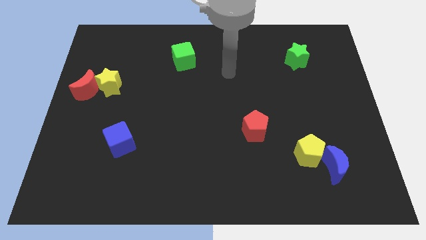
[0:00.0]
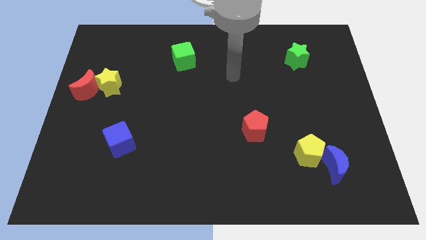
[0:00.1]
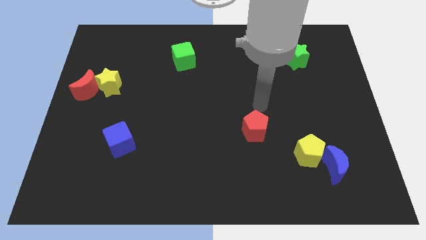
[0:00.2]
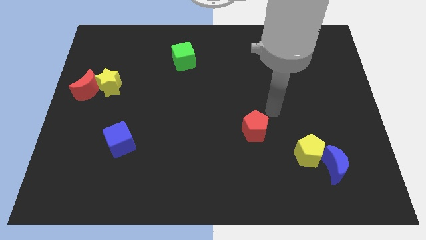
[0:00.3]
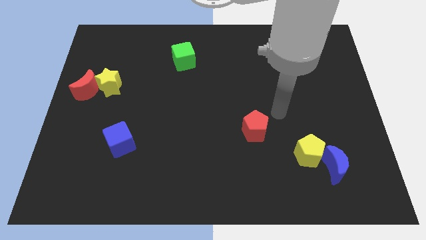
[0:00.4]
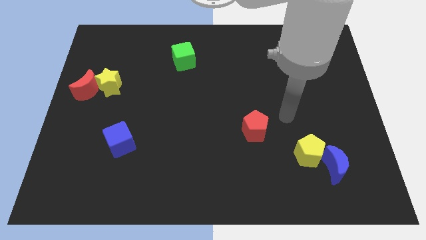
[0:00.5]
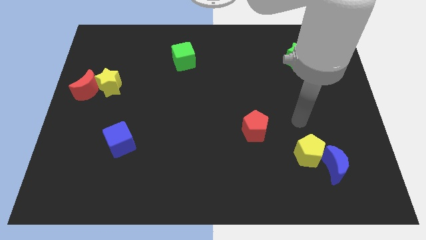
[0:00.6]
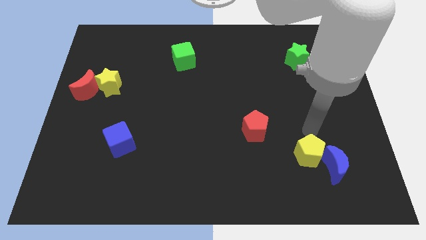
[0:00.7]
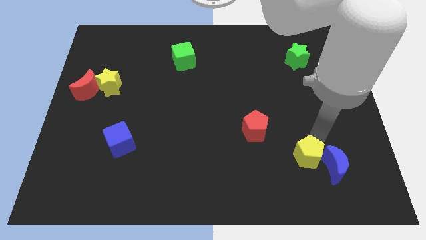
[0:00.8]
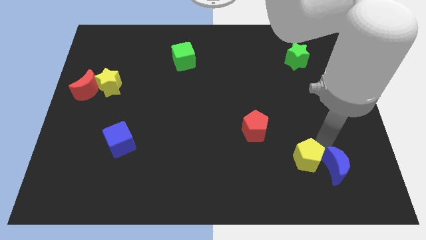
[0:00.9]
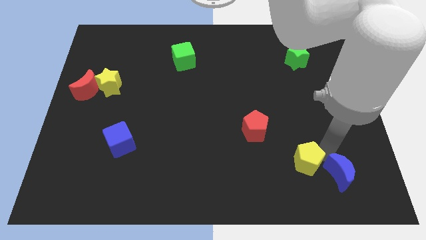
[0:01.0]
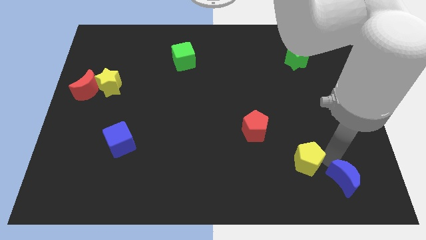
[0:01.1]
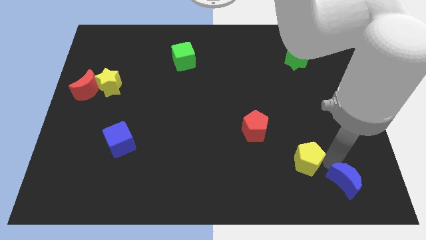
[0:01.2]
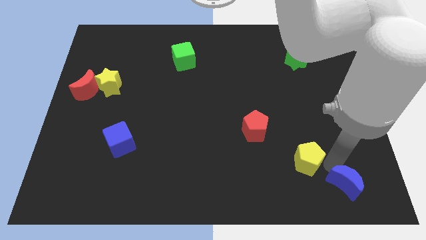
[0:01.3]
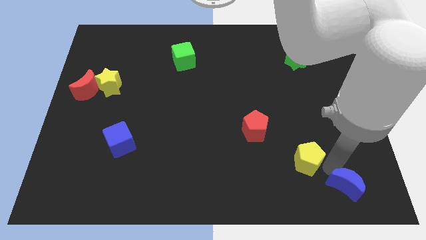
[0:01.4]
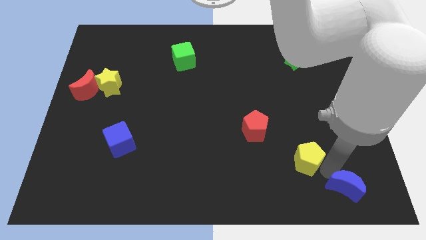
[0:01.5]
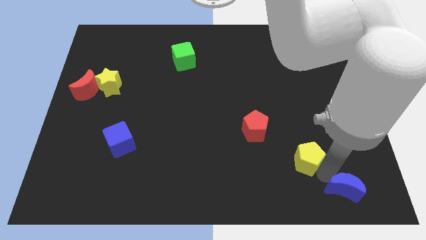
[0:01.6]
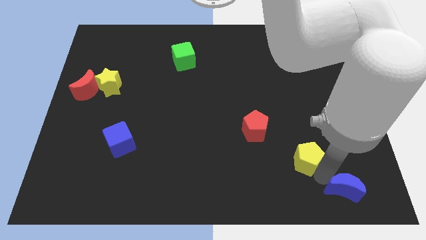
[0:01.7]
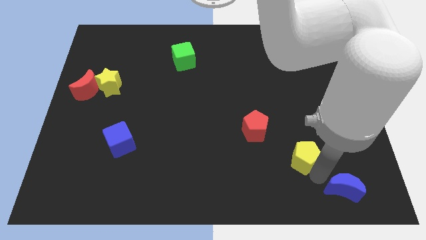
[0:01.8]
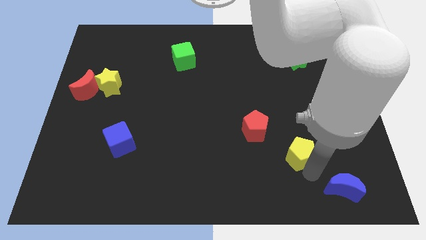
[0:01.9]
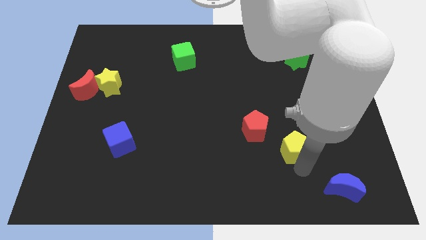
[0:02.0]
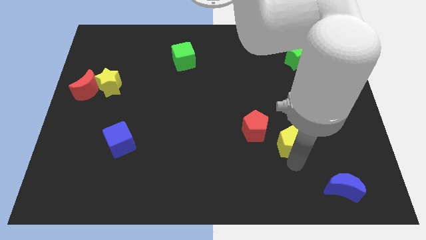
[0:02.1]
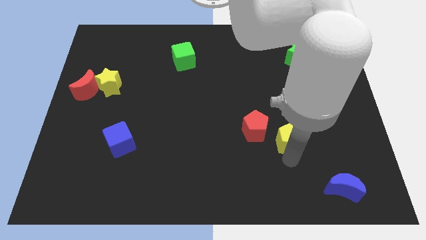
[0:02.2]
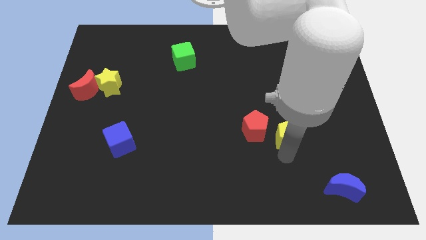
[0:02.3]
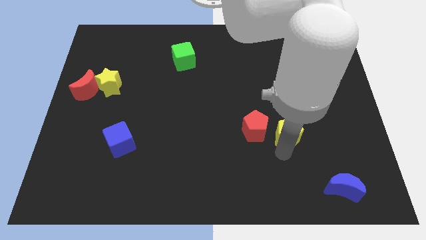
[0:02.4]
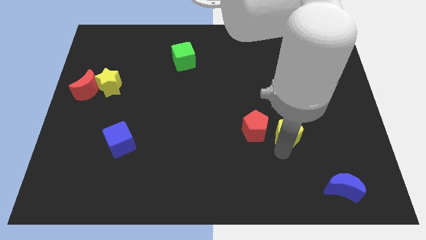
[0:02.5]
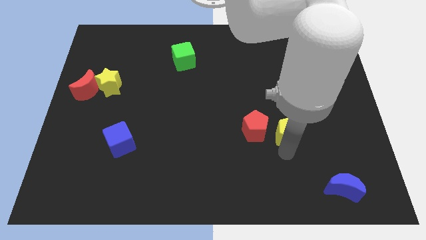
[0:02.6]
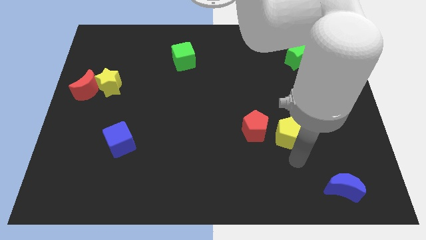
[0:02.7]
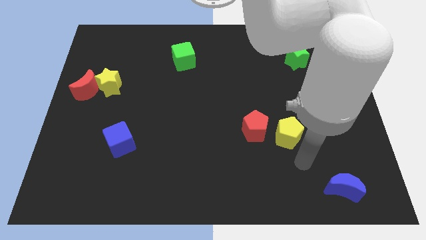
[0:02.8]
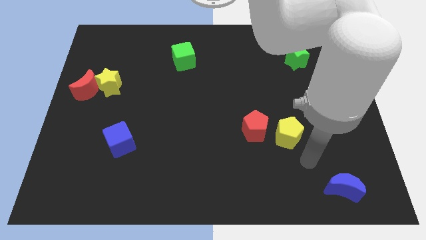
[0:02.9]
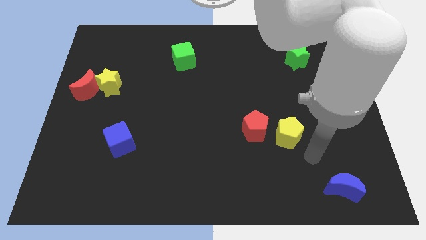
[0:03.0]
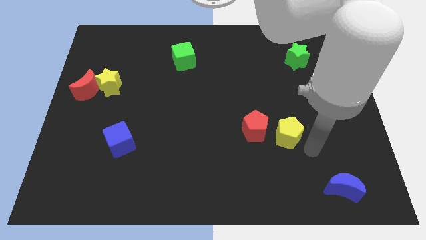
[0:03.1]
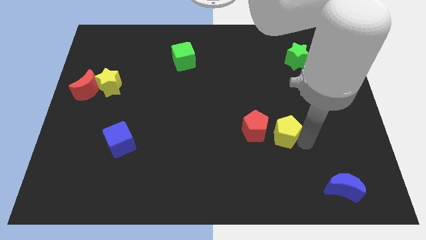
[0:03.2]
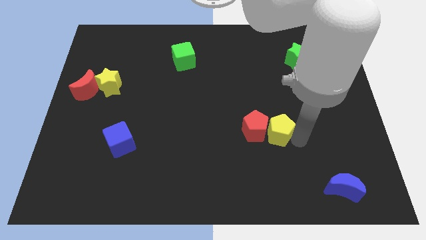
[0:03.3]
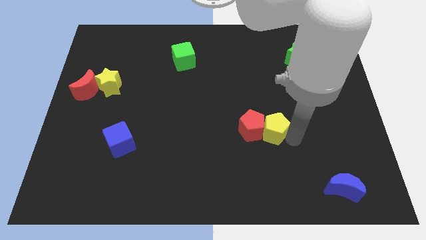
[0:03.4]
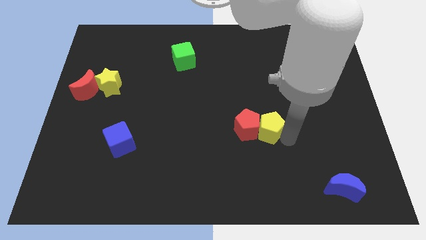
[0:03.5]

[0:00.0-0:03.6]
slide the yellow pentagon close to the red pentagon

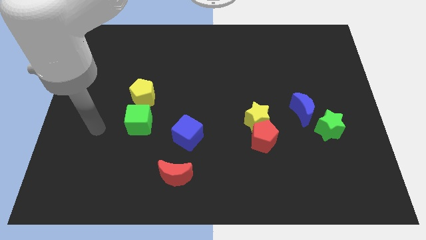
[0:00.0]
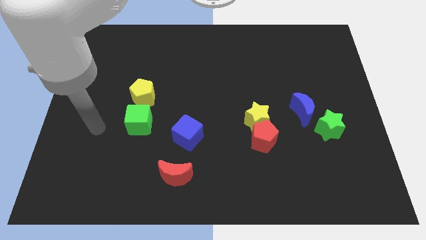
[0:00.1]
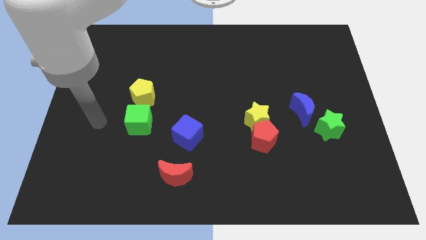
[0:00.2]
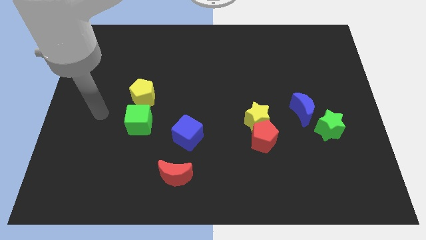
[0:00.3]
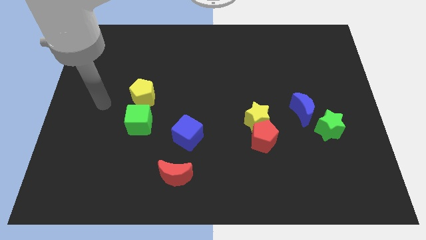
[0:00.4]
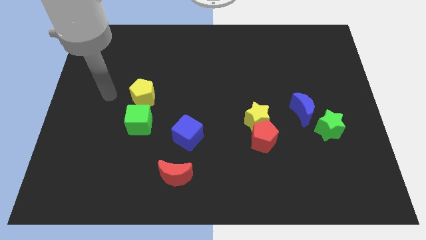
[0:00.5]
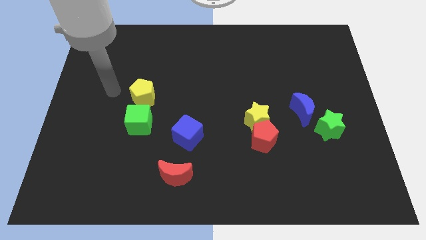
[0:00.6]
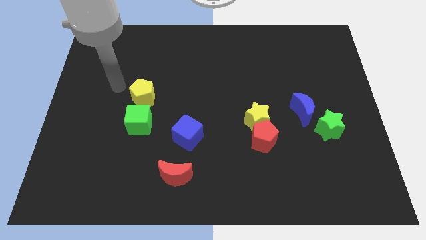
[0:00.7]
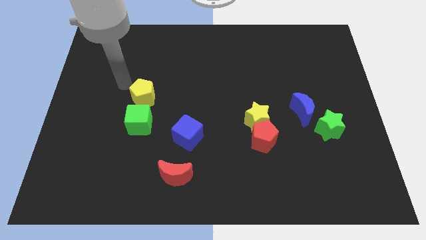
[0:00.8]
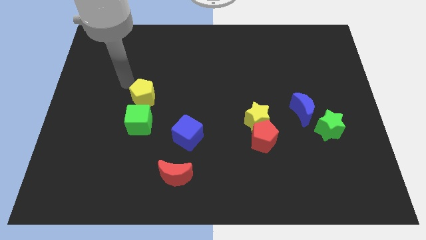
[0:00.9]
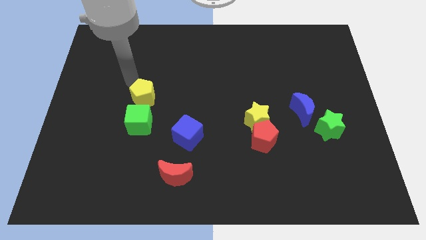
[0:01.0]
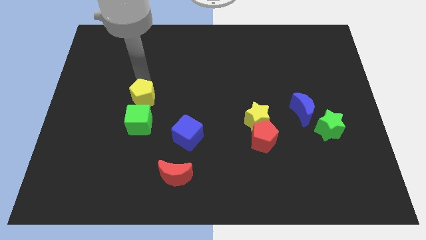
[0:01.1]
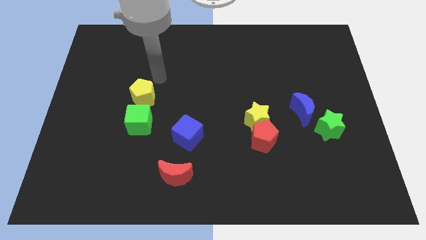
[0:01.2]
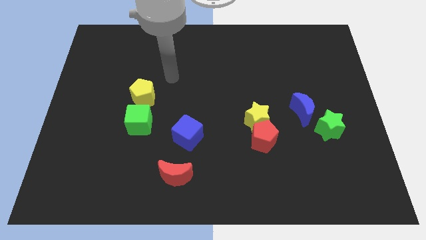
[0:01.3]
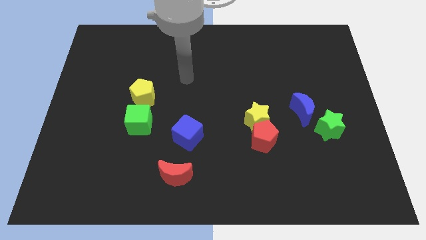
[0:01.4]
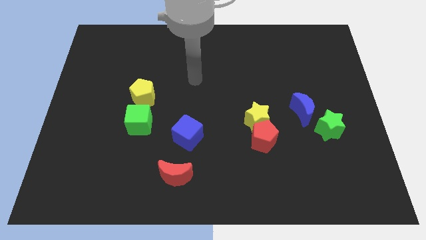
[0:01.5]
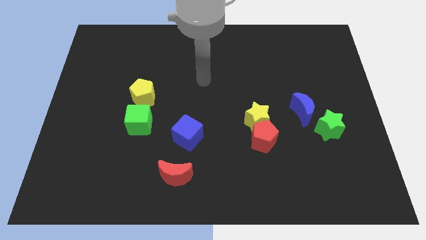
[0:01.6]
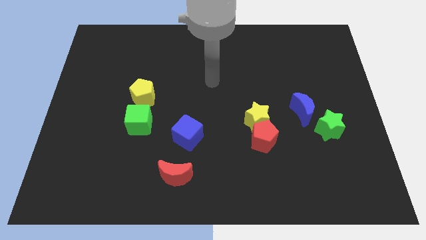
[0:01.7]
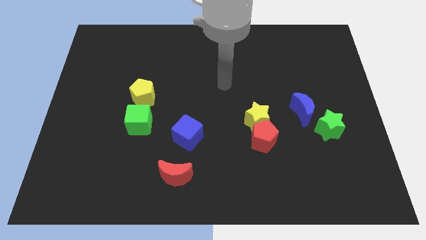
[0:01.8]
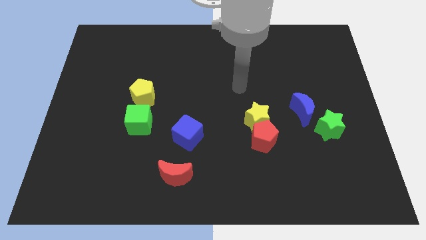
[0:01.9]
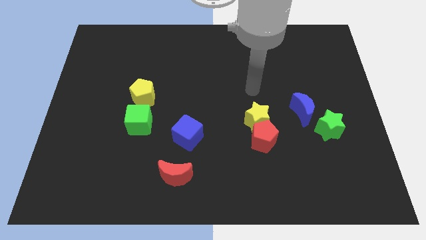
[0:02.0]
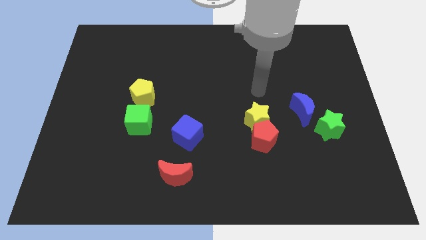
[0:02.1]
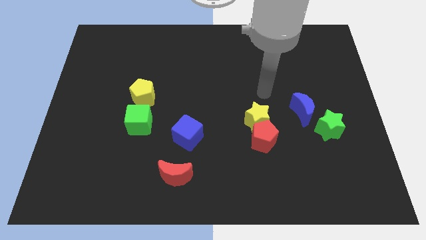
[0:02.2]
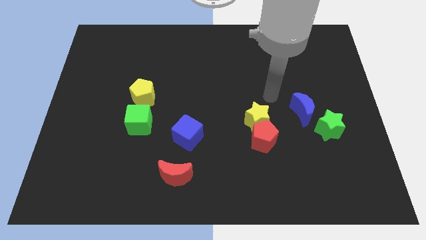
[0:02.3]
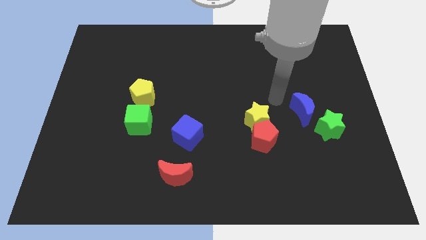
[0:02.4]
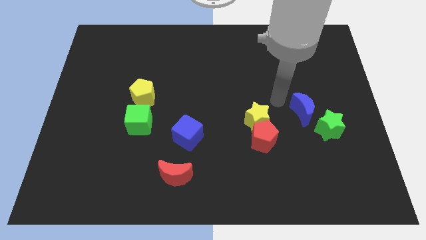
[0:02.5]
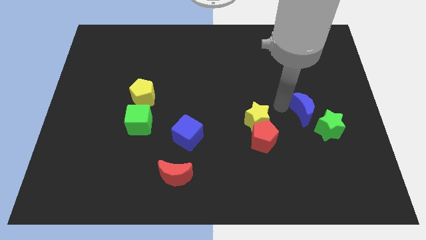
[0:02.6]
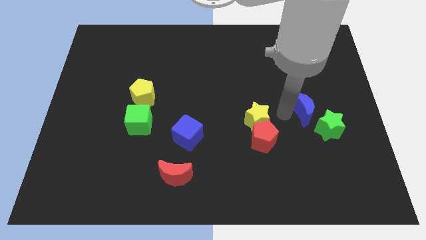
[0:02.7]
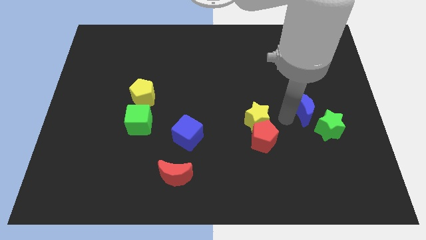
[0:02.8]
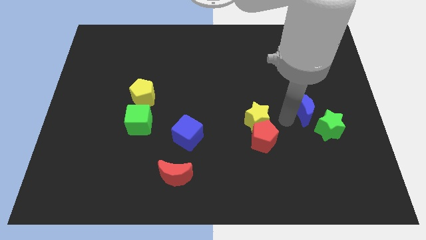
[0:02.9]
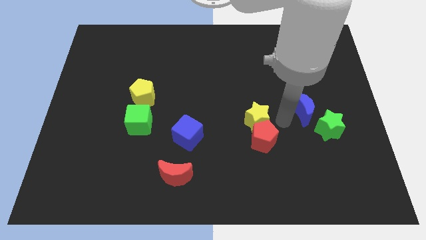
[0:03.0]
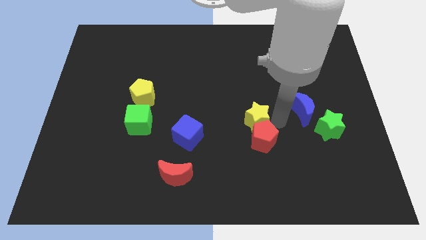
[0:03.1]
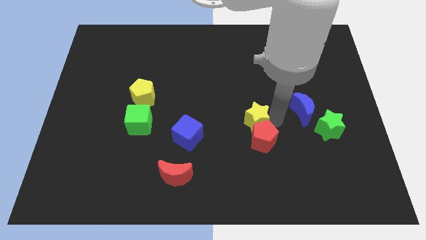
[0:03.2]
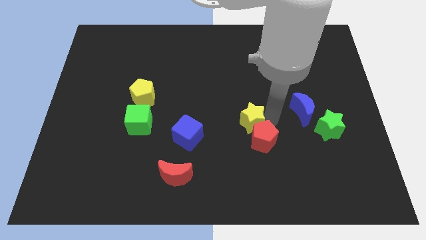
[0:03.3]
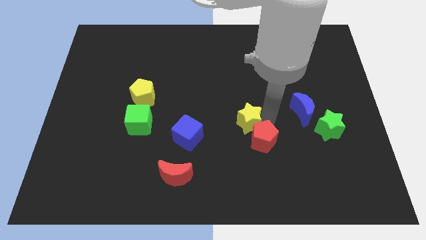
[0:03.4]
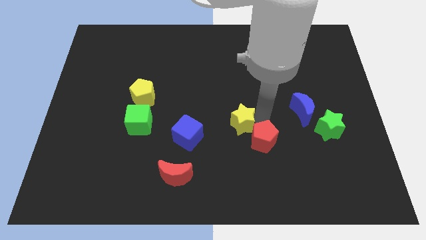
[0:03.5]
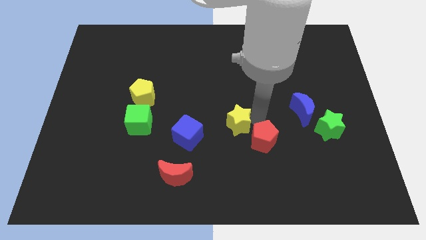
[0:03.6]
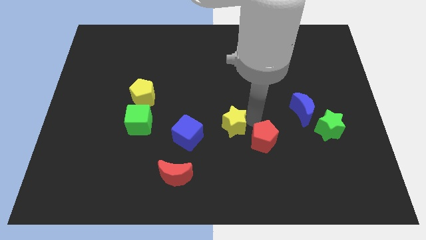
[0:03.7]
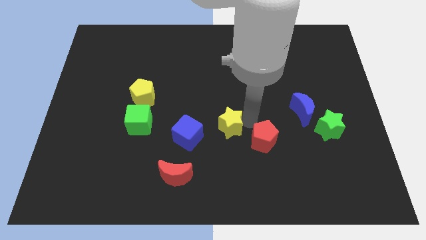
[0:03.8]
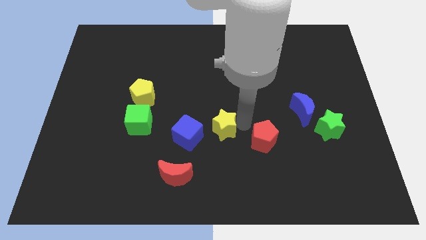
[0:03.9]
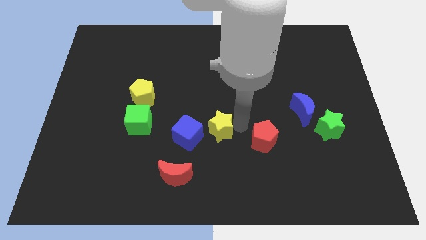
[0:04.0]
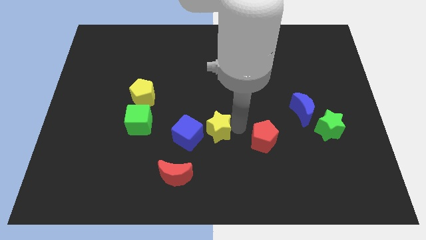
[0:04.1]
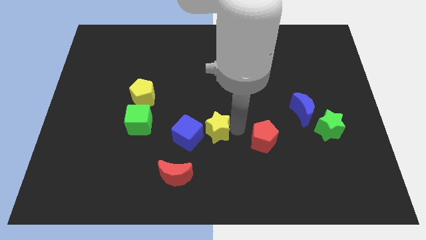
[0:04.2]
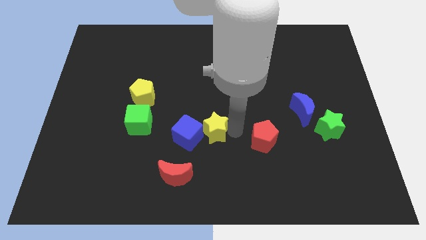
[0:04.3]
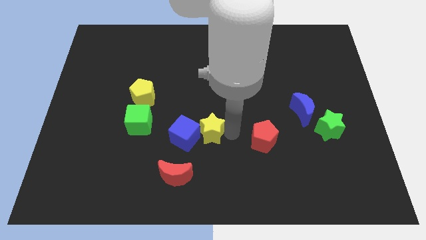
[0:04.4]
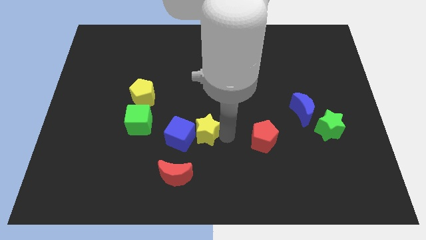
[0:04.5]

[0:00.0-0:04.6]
put the yellow star next to the blue cube
